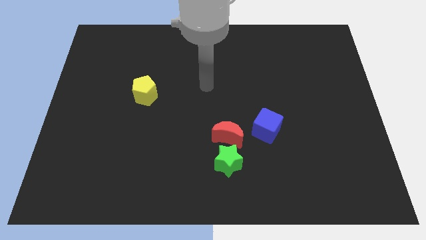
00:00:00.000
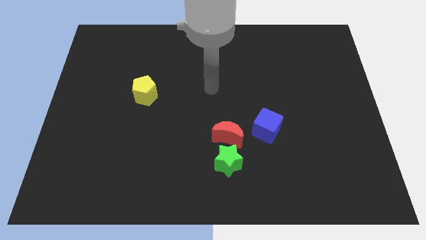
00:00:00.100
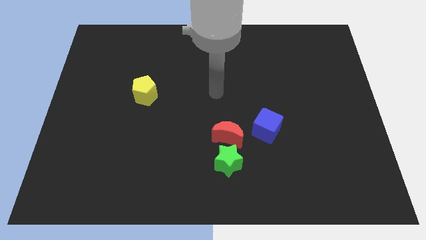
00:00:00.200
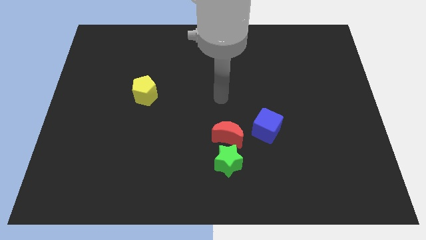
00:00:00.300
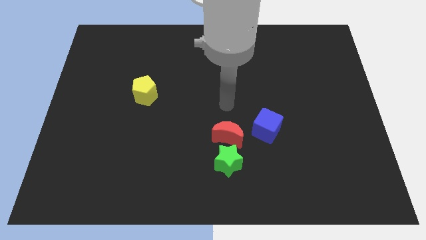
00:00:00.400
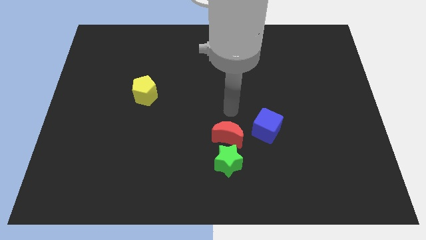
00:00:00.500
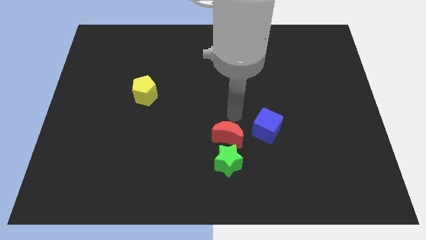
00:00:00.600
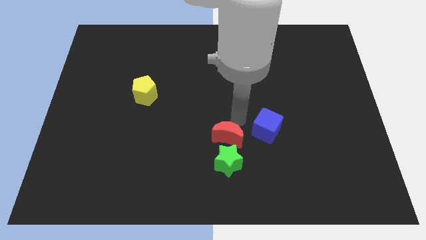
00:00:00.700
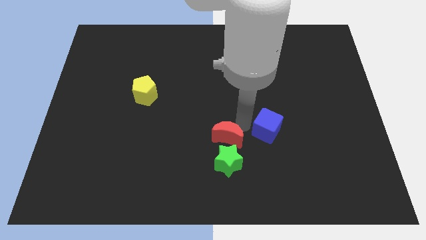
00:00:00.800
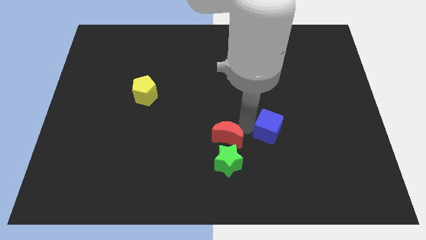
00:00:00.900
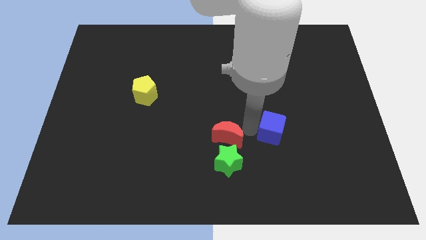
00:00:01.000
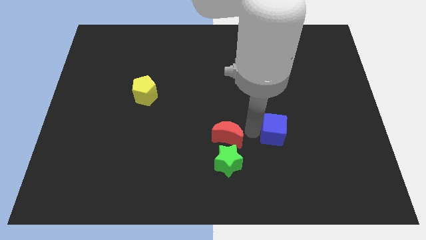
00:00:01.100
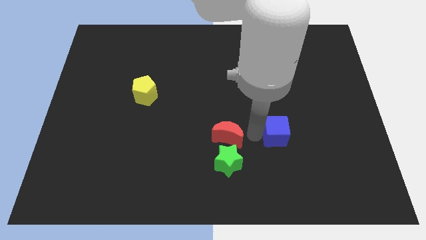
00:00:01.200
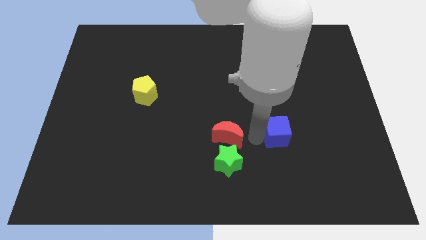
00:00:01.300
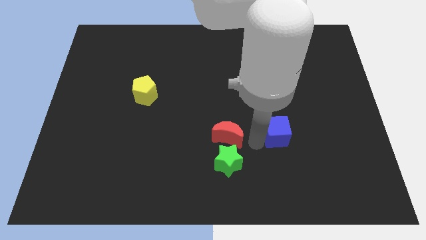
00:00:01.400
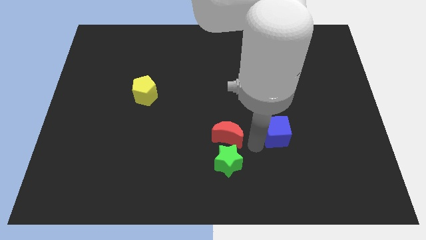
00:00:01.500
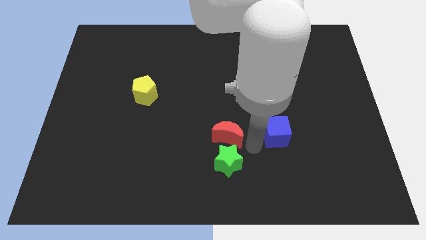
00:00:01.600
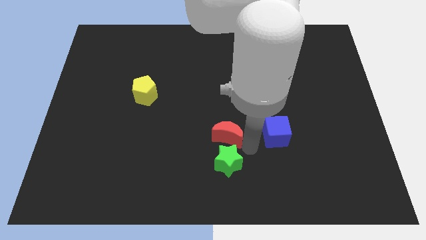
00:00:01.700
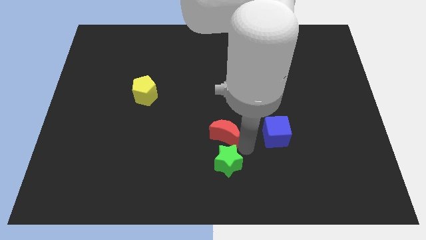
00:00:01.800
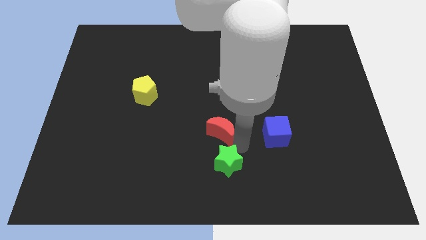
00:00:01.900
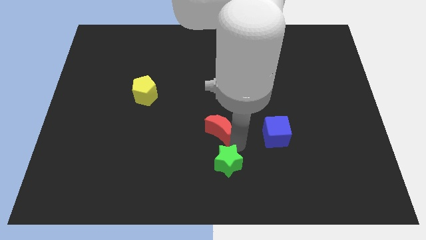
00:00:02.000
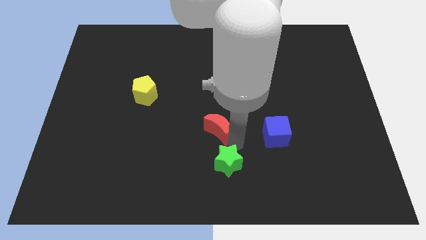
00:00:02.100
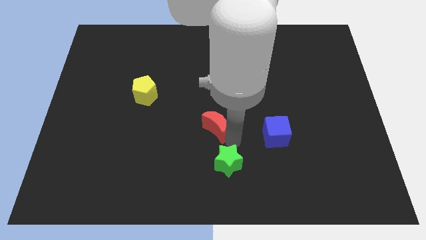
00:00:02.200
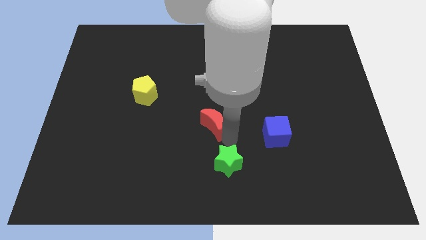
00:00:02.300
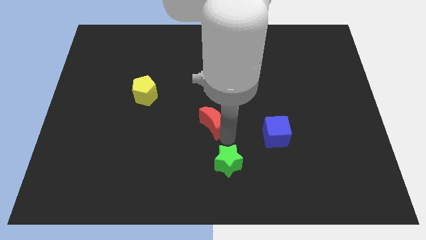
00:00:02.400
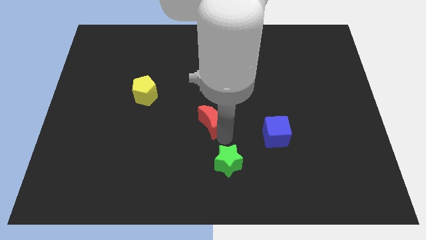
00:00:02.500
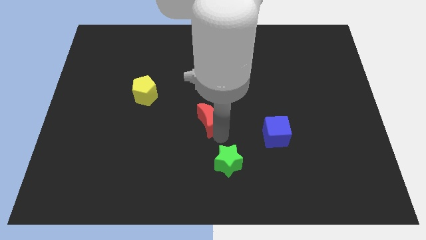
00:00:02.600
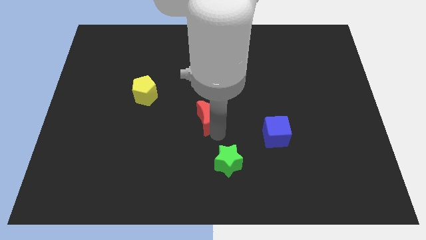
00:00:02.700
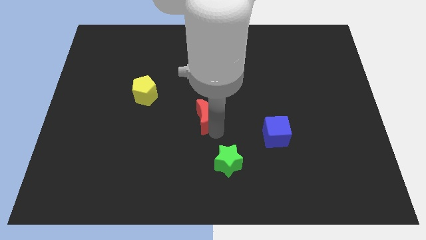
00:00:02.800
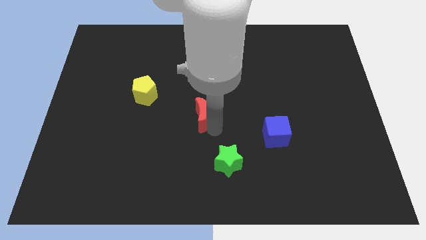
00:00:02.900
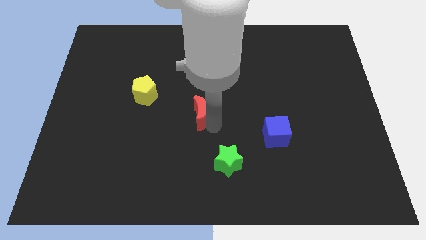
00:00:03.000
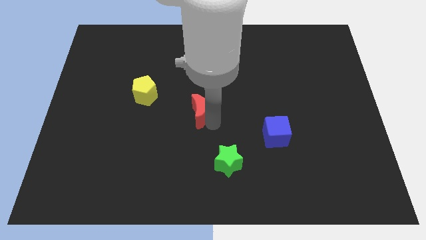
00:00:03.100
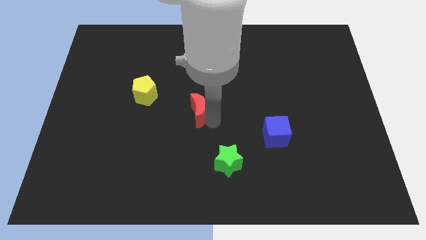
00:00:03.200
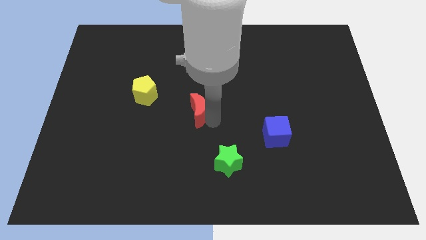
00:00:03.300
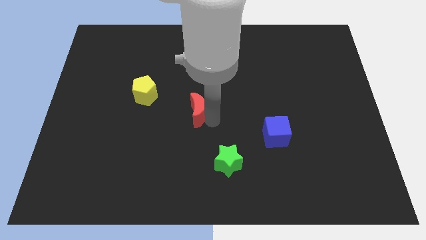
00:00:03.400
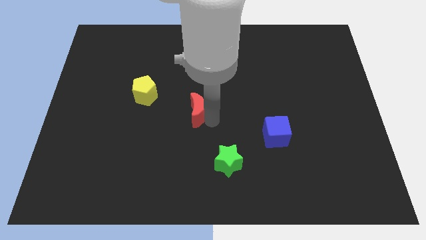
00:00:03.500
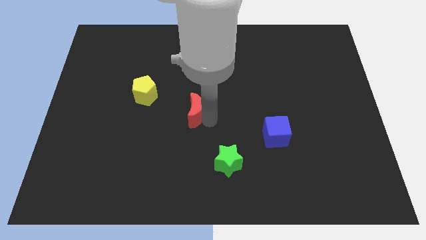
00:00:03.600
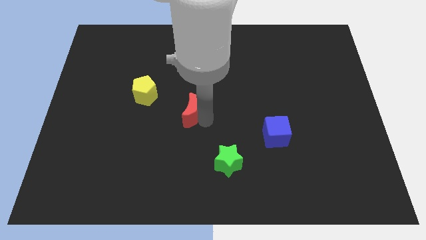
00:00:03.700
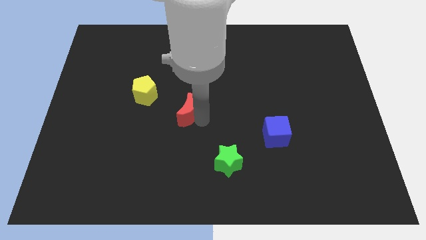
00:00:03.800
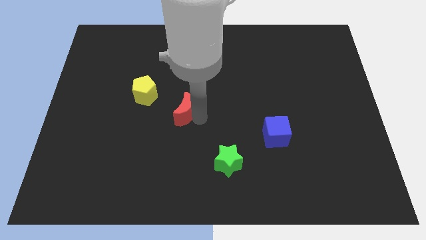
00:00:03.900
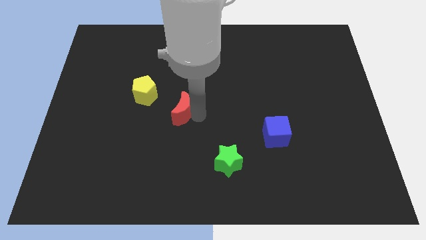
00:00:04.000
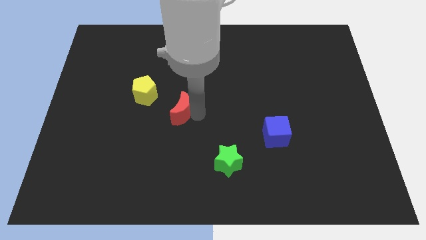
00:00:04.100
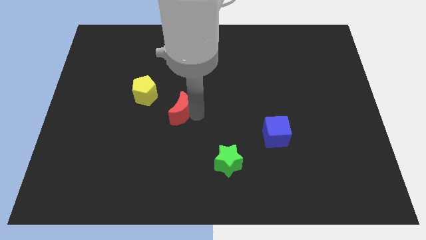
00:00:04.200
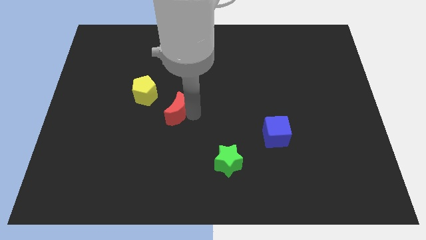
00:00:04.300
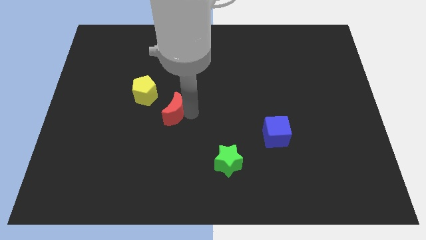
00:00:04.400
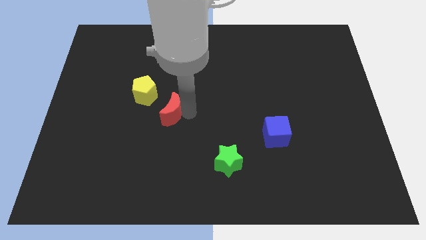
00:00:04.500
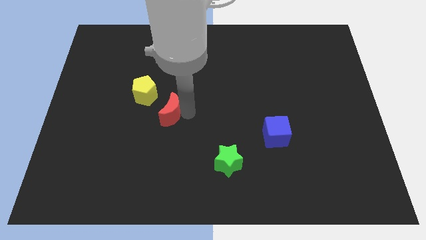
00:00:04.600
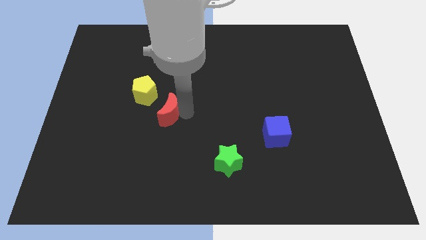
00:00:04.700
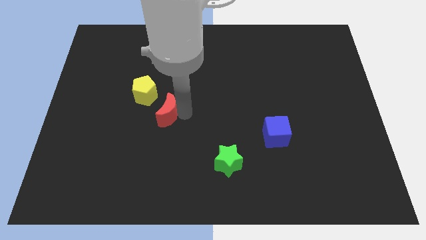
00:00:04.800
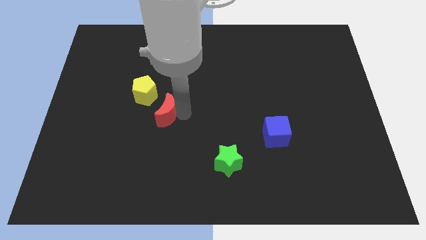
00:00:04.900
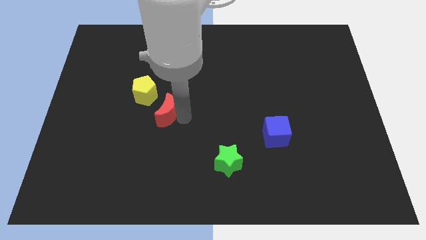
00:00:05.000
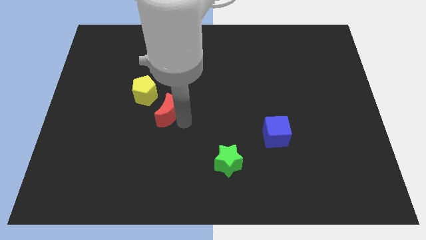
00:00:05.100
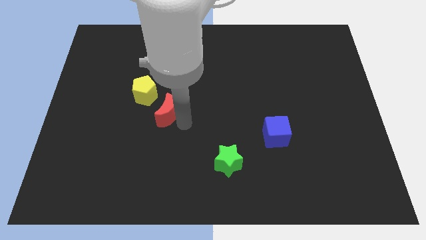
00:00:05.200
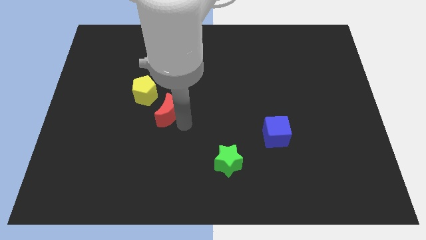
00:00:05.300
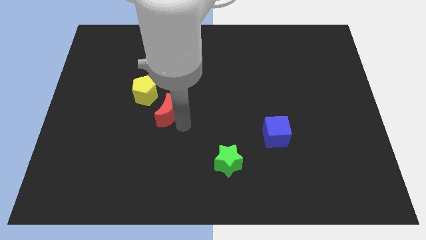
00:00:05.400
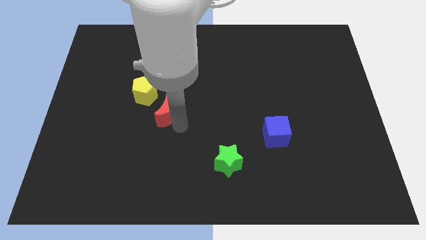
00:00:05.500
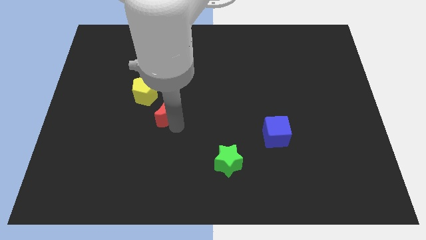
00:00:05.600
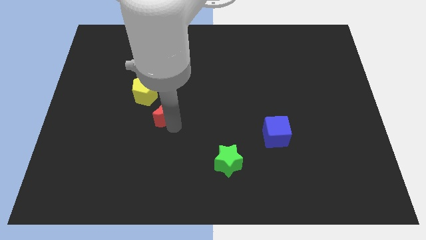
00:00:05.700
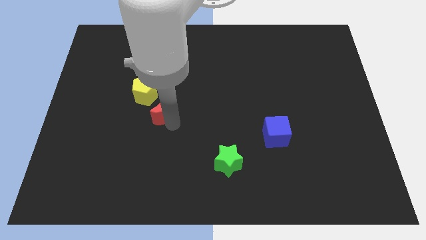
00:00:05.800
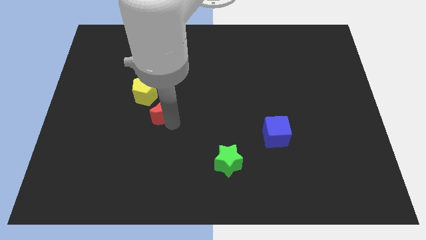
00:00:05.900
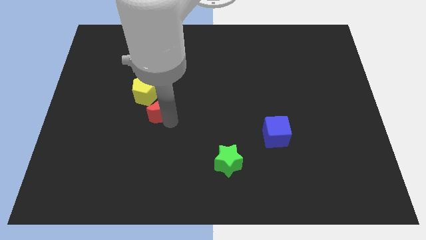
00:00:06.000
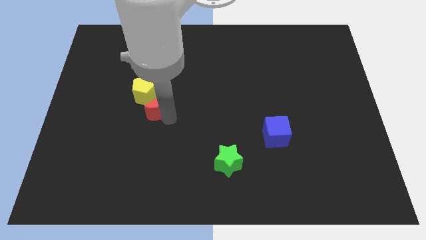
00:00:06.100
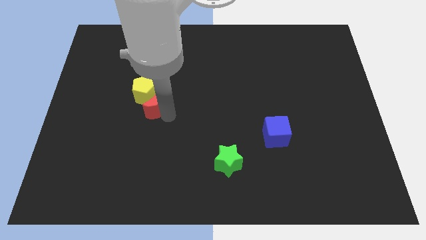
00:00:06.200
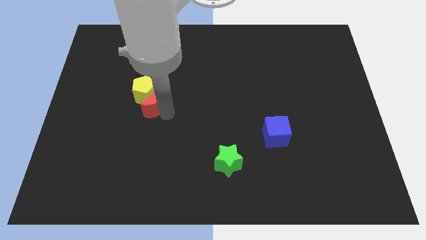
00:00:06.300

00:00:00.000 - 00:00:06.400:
slide the red moon close to the pentagon

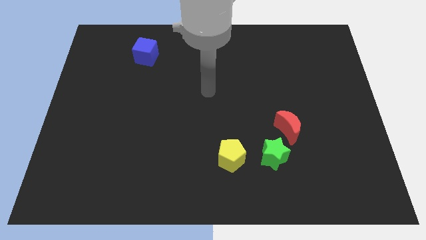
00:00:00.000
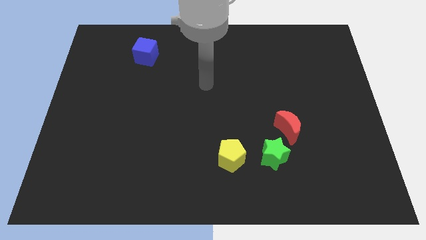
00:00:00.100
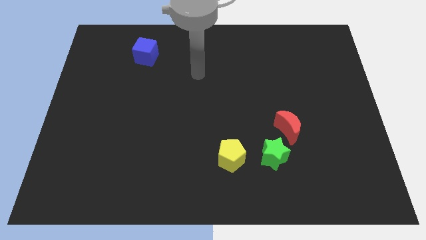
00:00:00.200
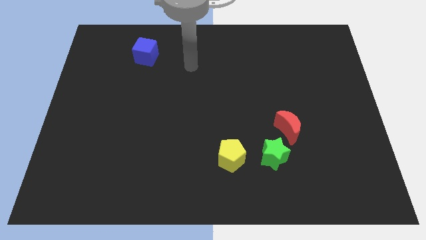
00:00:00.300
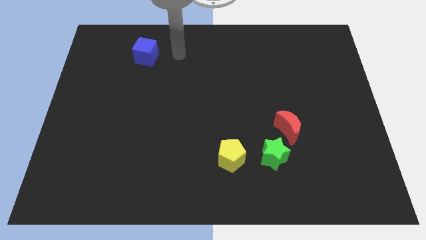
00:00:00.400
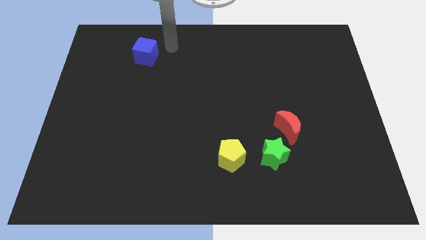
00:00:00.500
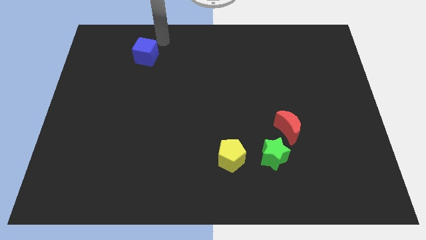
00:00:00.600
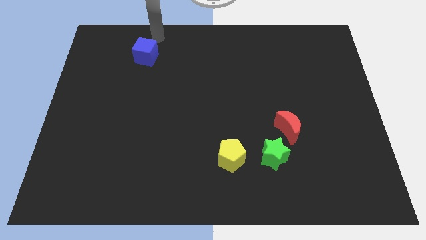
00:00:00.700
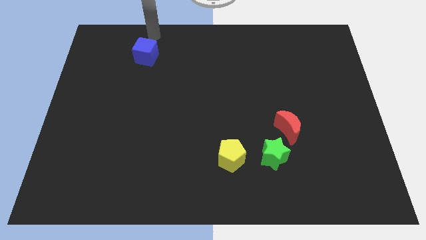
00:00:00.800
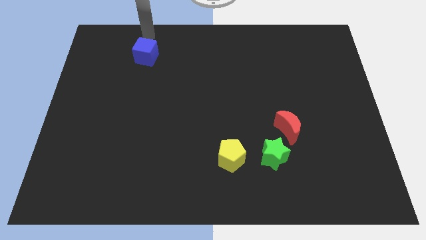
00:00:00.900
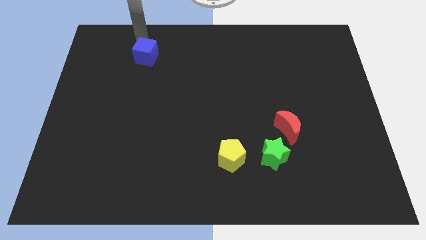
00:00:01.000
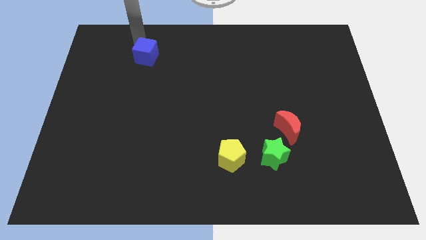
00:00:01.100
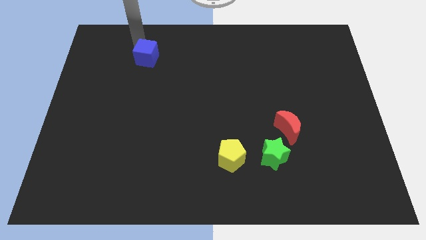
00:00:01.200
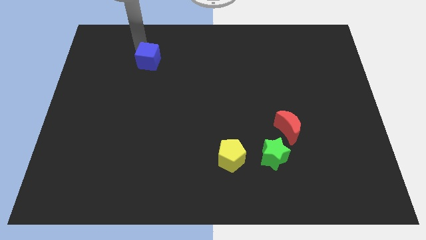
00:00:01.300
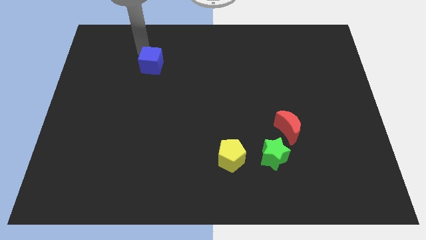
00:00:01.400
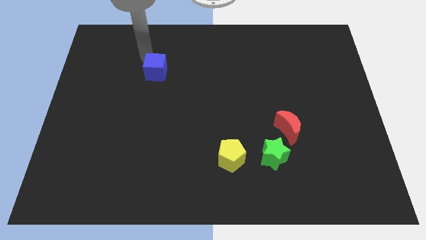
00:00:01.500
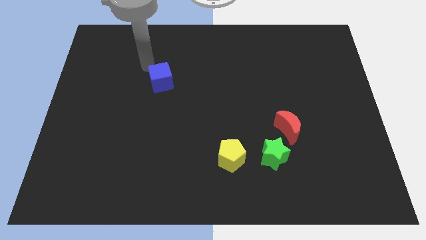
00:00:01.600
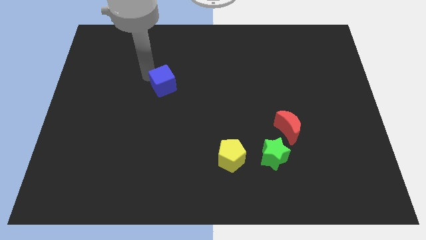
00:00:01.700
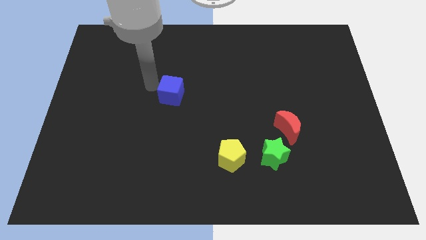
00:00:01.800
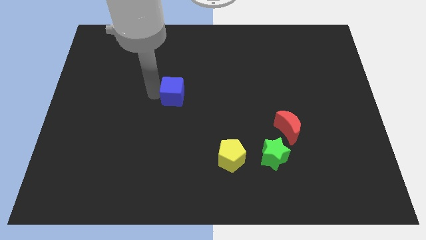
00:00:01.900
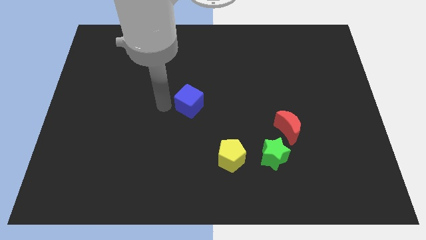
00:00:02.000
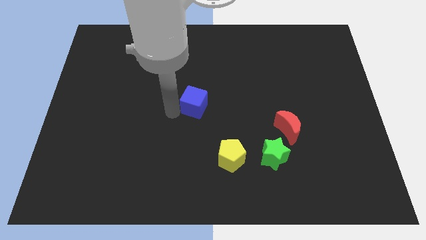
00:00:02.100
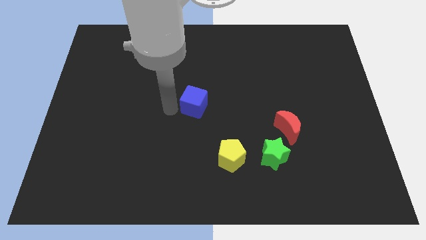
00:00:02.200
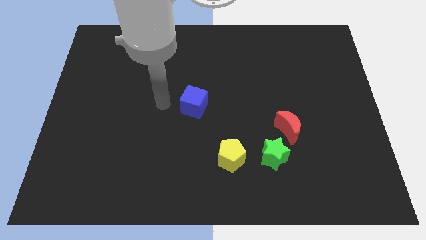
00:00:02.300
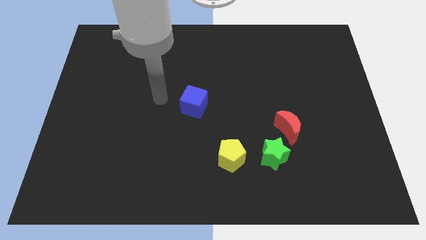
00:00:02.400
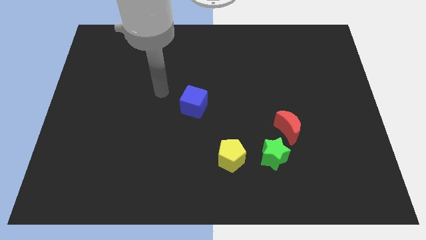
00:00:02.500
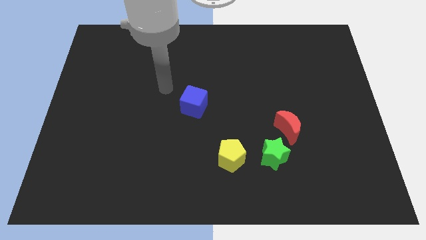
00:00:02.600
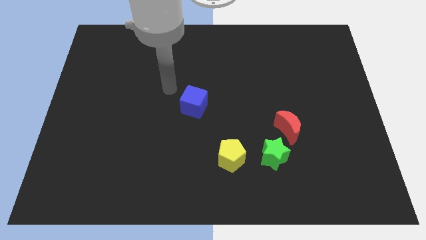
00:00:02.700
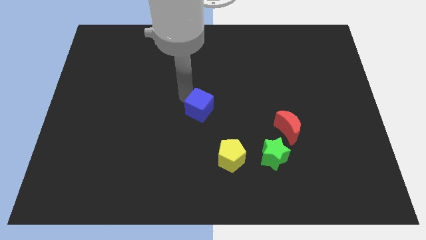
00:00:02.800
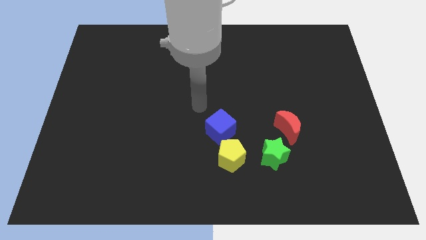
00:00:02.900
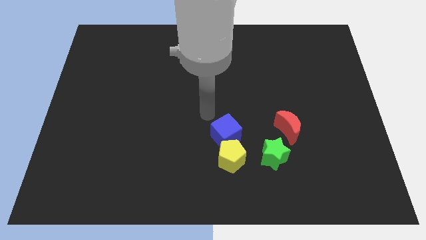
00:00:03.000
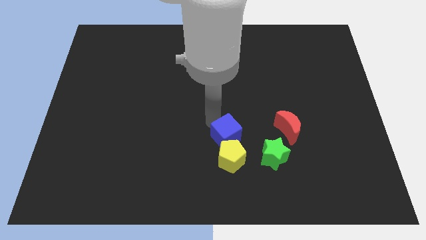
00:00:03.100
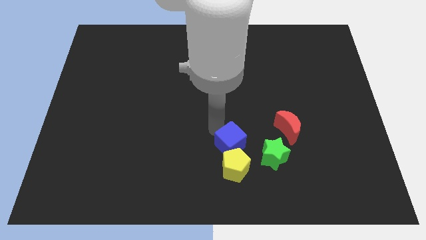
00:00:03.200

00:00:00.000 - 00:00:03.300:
slide the blue block close to the pentagon
